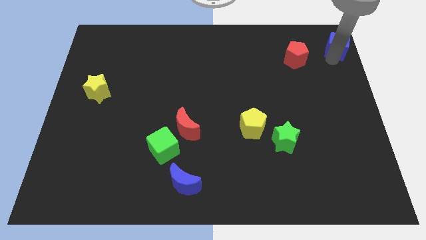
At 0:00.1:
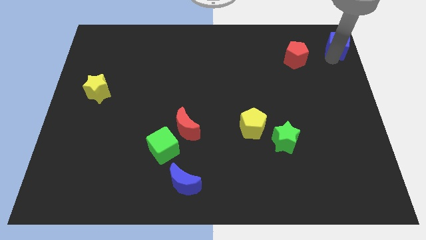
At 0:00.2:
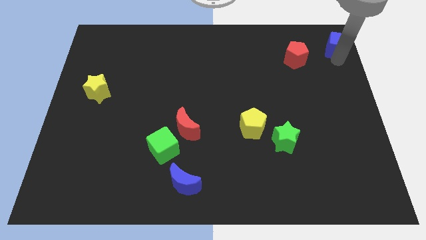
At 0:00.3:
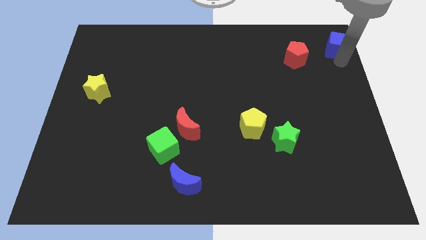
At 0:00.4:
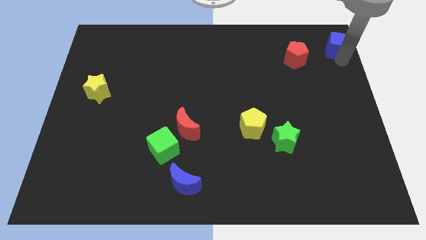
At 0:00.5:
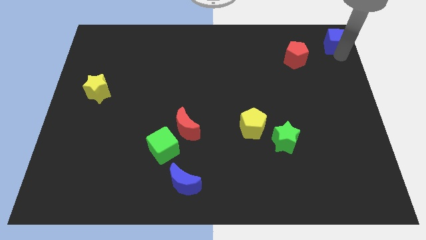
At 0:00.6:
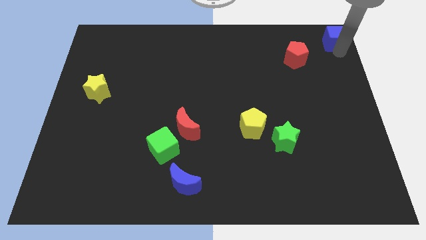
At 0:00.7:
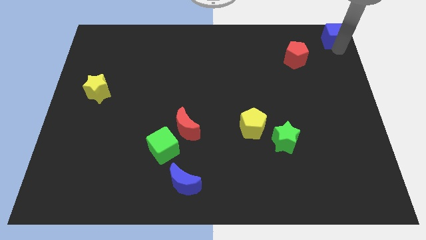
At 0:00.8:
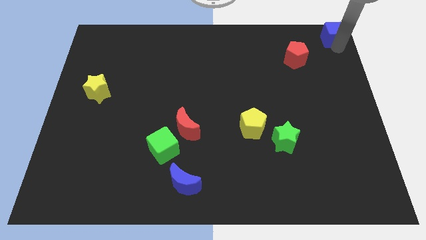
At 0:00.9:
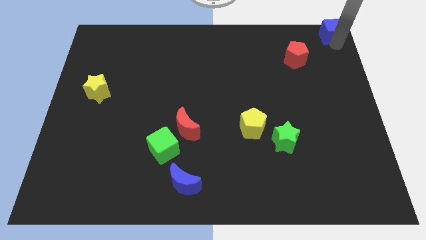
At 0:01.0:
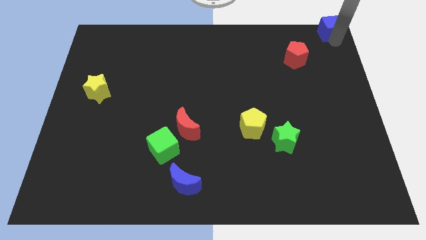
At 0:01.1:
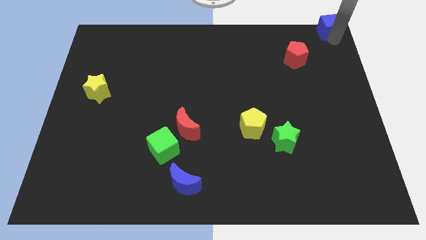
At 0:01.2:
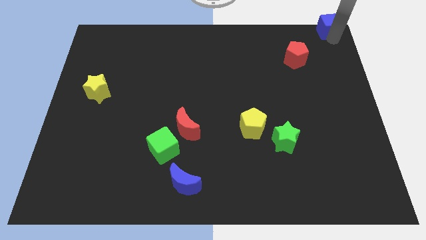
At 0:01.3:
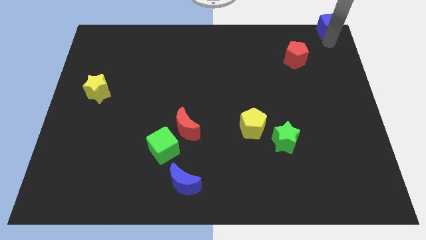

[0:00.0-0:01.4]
push the blue cube to the top right side of the red pentagon

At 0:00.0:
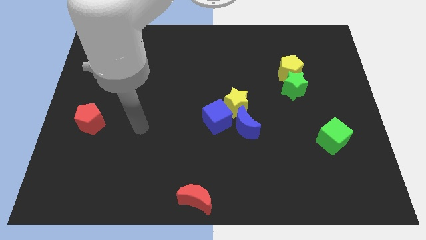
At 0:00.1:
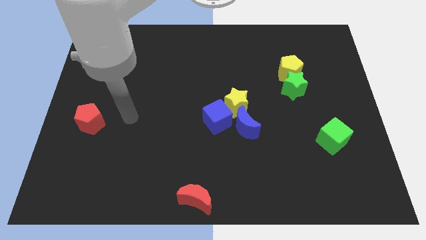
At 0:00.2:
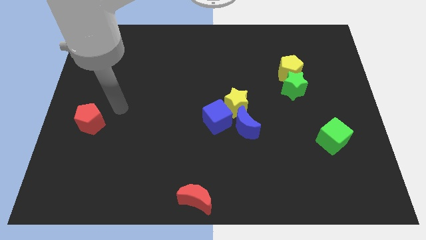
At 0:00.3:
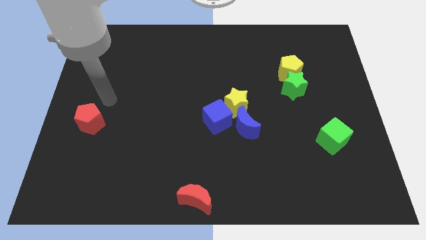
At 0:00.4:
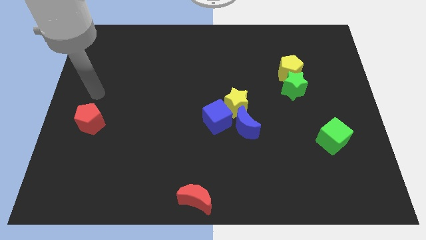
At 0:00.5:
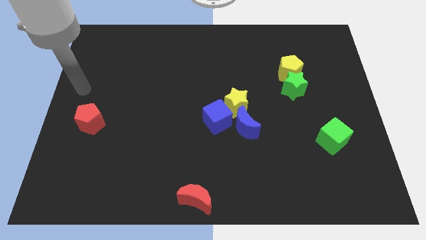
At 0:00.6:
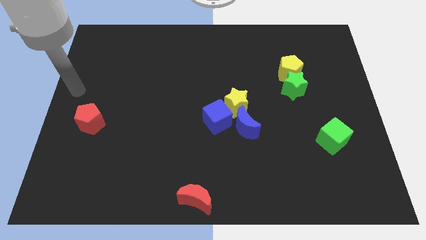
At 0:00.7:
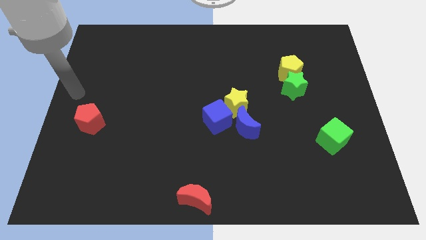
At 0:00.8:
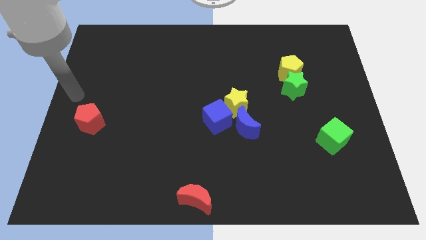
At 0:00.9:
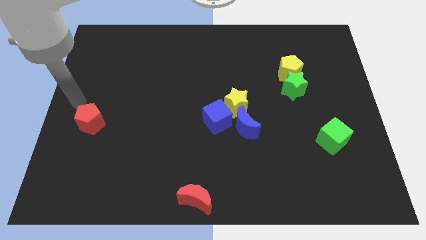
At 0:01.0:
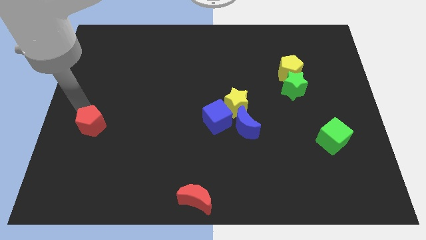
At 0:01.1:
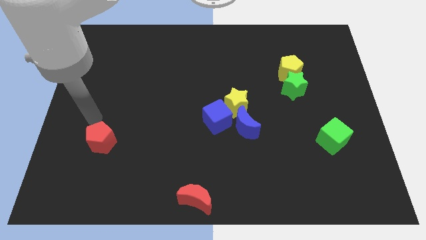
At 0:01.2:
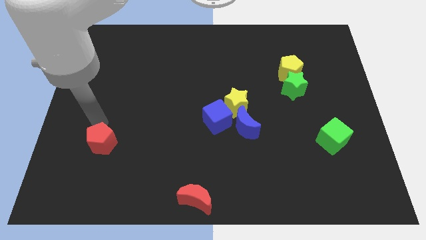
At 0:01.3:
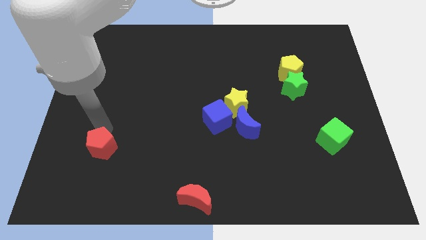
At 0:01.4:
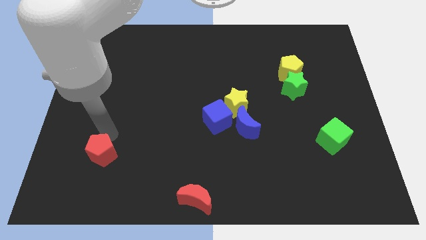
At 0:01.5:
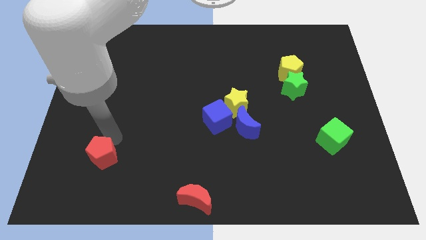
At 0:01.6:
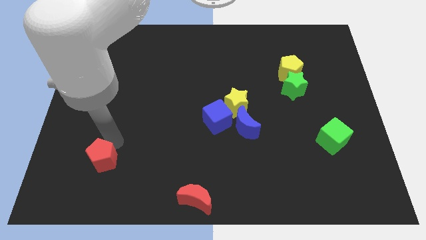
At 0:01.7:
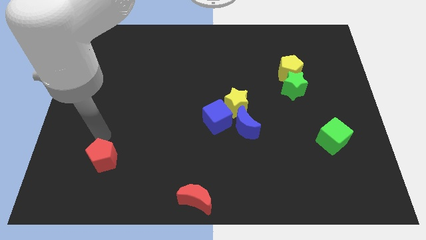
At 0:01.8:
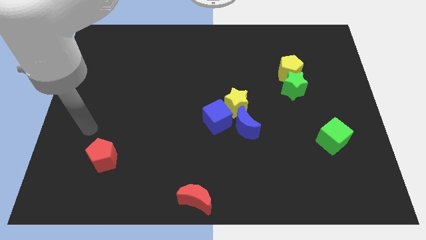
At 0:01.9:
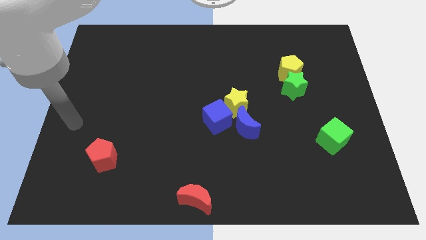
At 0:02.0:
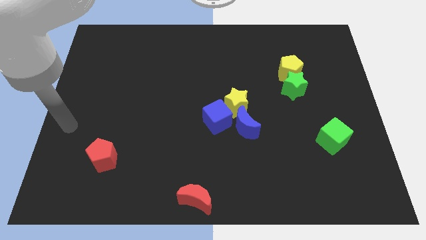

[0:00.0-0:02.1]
push the red pentagon to the bottom left of the board

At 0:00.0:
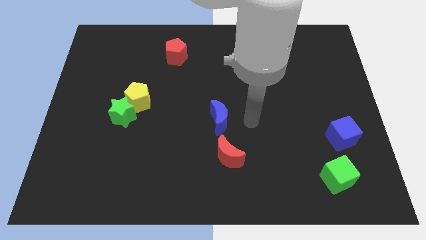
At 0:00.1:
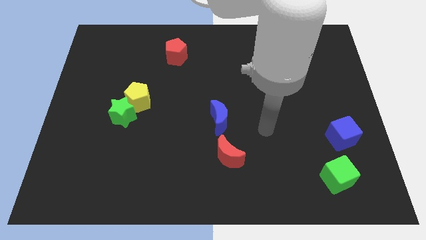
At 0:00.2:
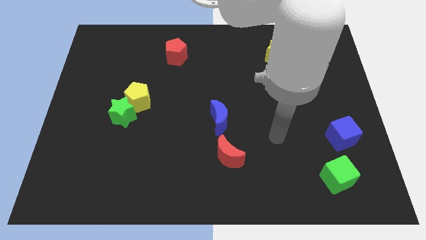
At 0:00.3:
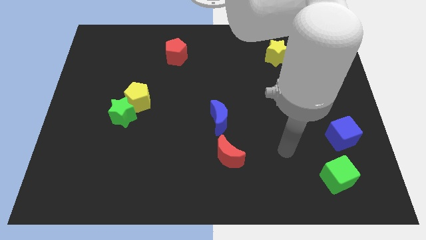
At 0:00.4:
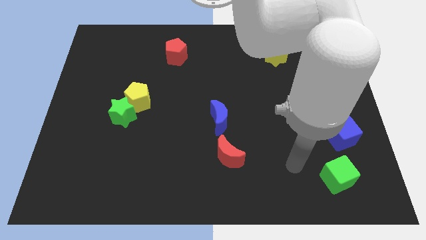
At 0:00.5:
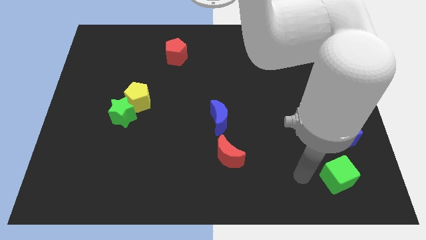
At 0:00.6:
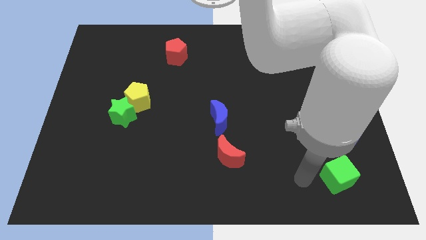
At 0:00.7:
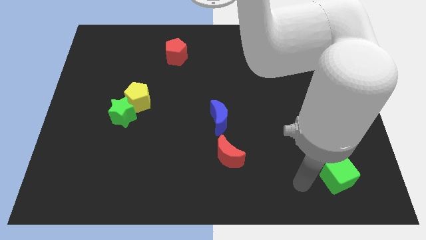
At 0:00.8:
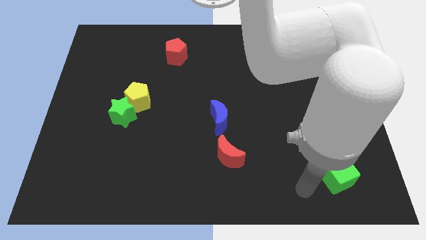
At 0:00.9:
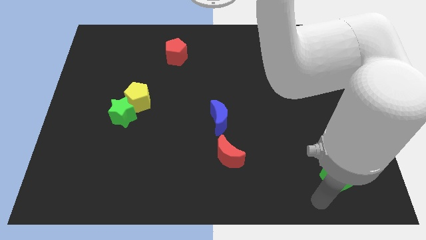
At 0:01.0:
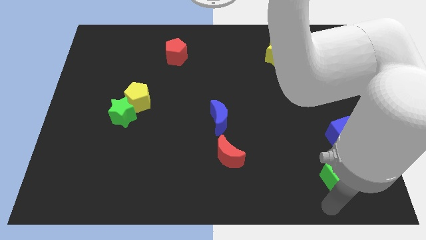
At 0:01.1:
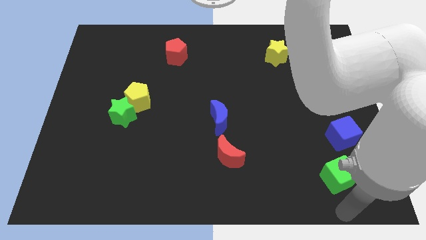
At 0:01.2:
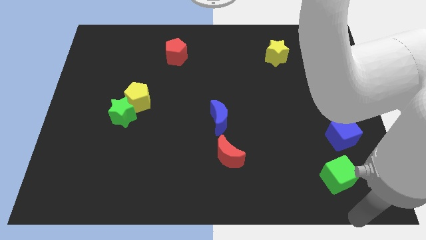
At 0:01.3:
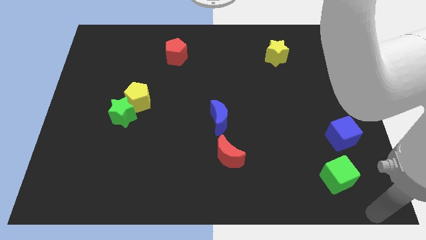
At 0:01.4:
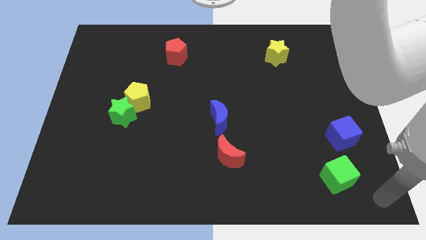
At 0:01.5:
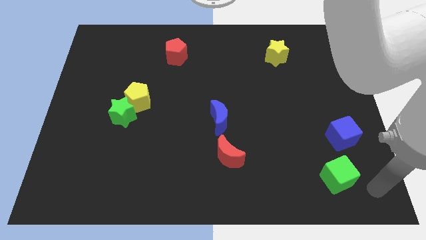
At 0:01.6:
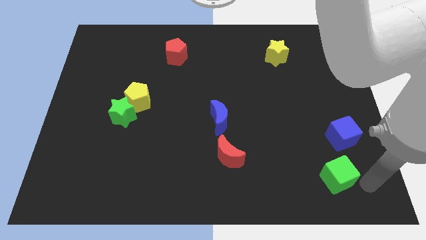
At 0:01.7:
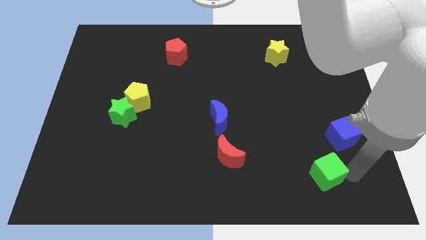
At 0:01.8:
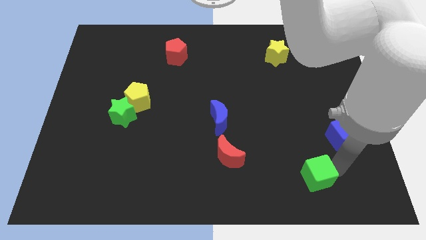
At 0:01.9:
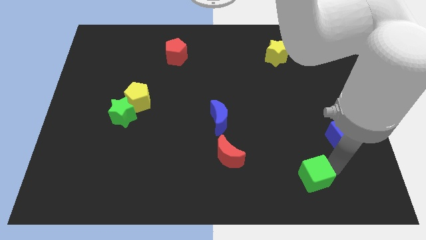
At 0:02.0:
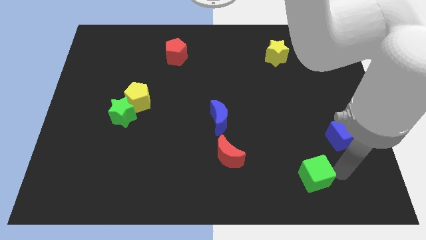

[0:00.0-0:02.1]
slightly push the green cube towards the left

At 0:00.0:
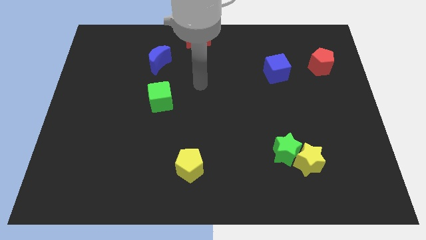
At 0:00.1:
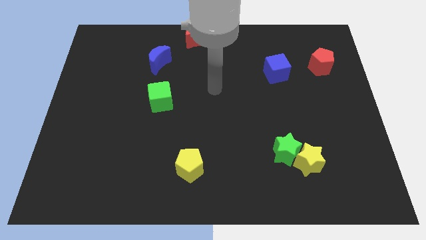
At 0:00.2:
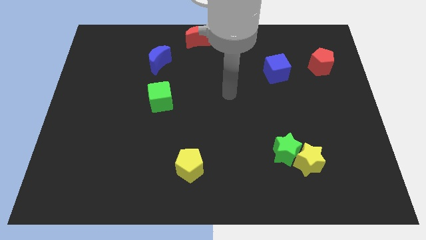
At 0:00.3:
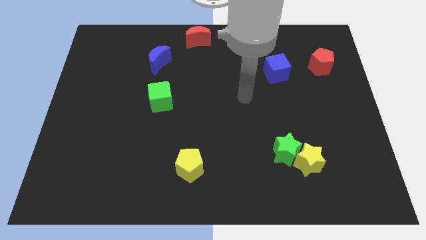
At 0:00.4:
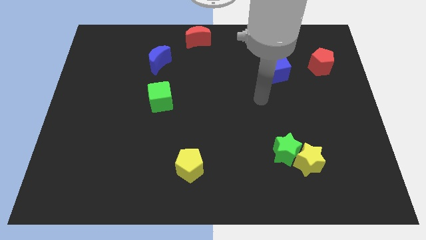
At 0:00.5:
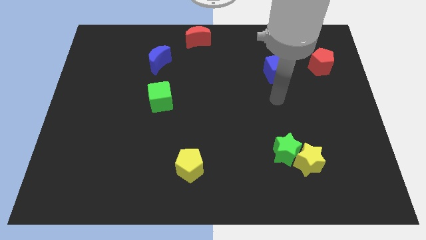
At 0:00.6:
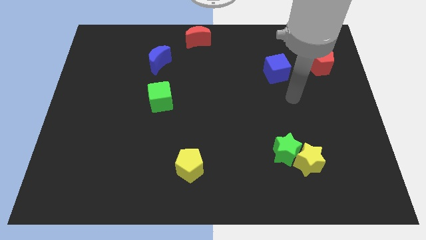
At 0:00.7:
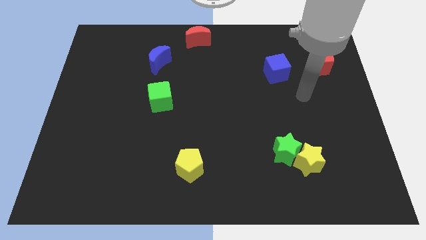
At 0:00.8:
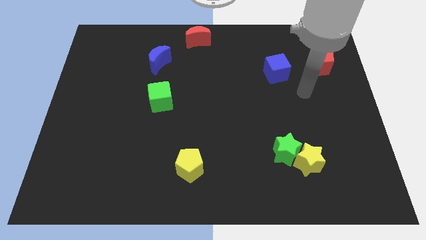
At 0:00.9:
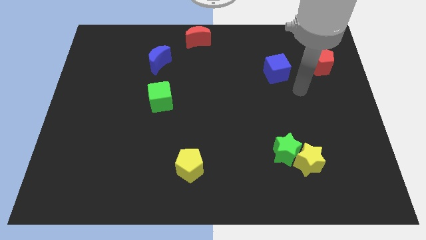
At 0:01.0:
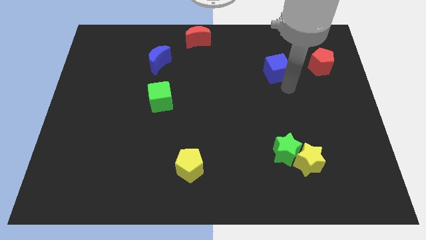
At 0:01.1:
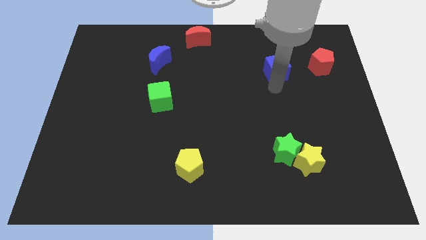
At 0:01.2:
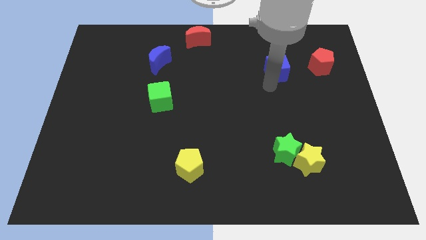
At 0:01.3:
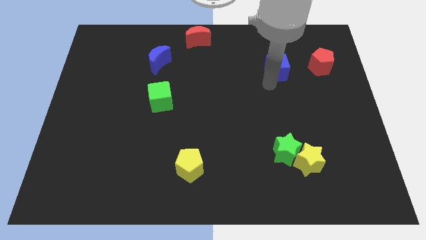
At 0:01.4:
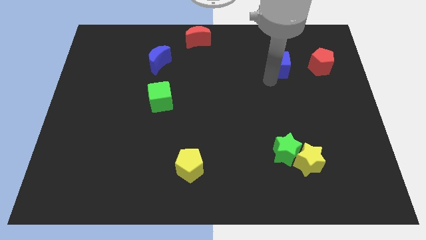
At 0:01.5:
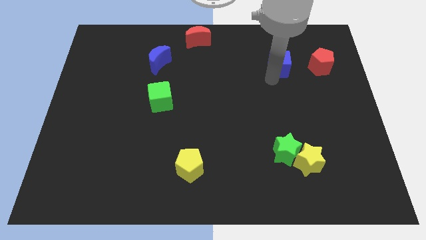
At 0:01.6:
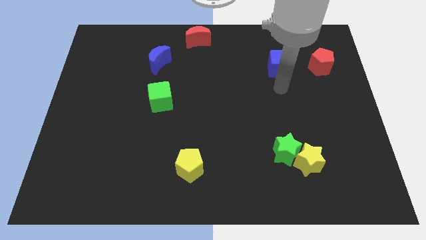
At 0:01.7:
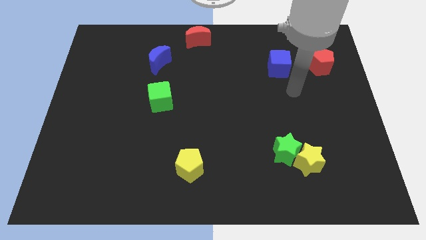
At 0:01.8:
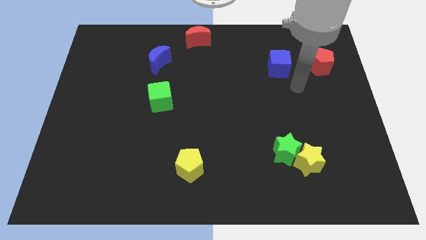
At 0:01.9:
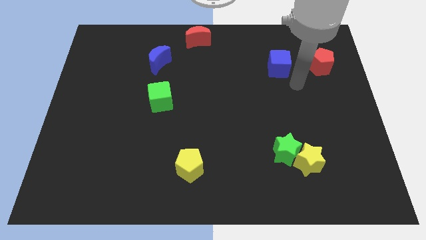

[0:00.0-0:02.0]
push the blue cube slightly to the top

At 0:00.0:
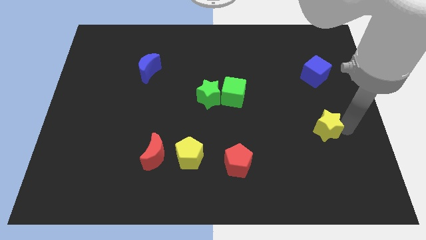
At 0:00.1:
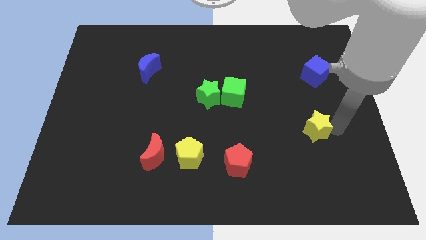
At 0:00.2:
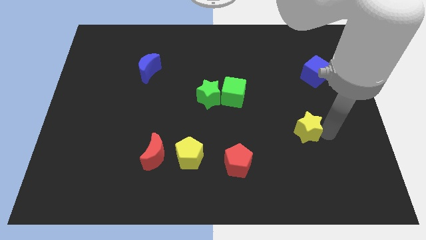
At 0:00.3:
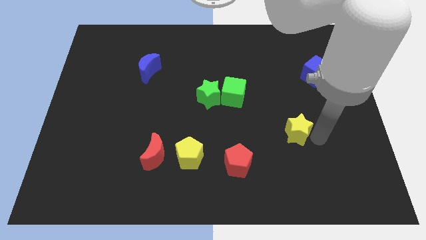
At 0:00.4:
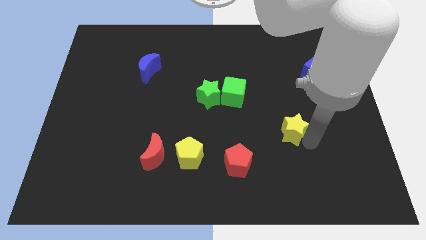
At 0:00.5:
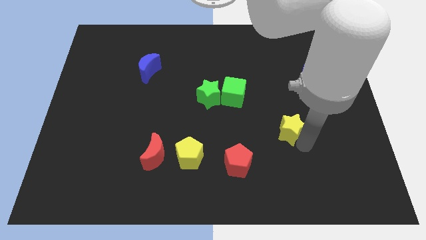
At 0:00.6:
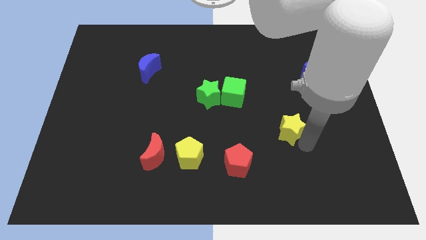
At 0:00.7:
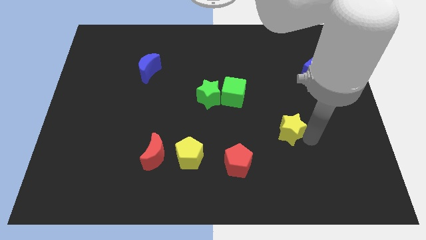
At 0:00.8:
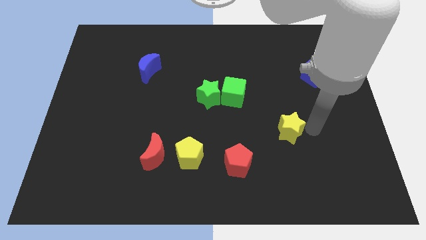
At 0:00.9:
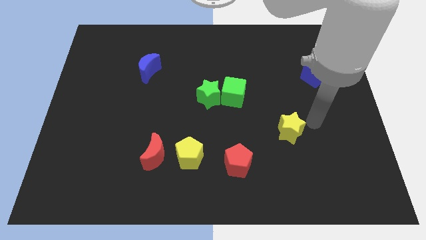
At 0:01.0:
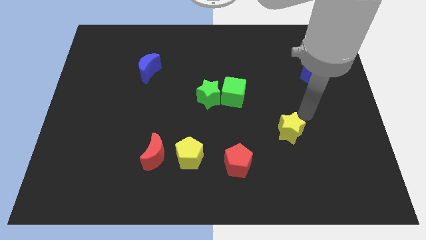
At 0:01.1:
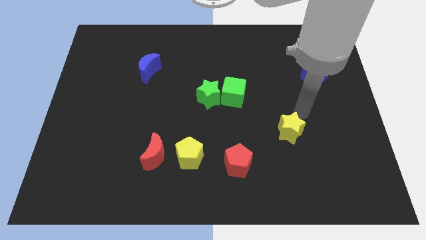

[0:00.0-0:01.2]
put the yellow star diagonally bottom left to the blue cube

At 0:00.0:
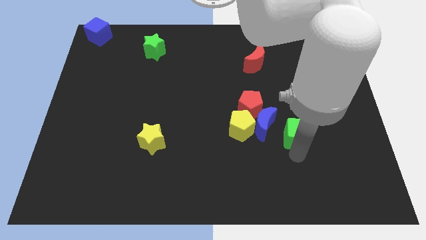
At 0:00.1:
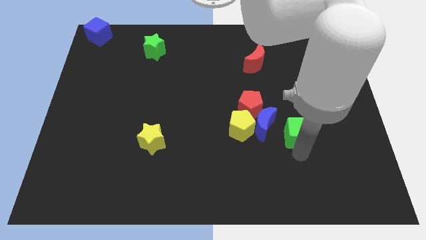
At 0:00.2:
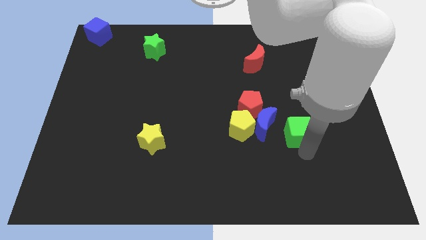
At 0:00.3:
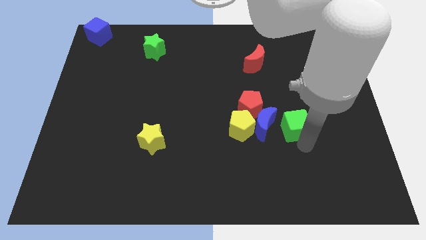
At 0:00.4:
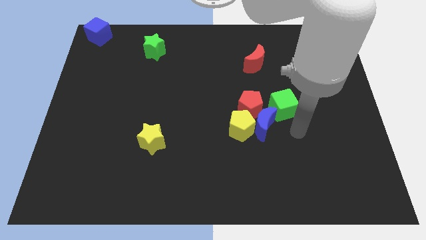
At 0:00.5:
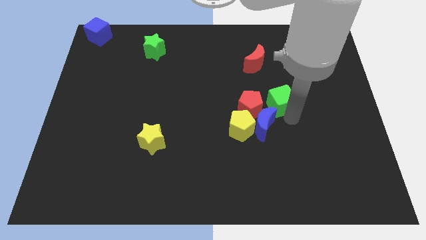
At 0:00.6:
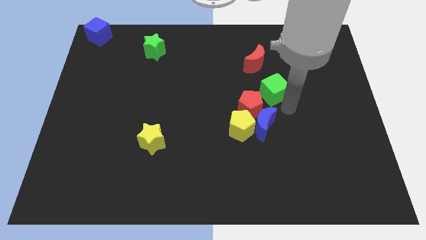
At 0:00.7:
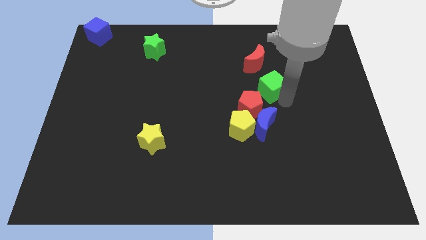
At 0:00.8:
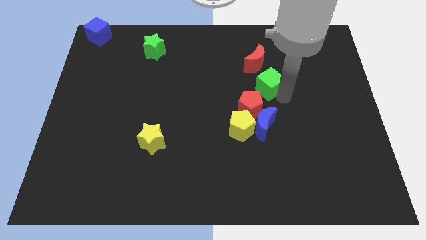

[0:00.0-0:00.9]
take the green cube to the top
